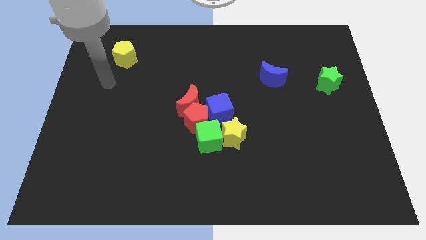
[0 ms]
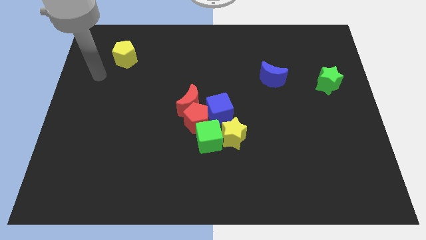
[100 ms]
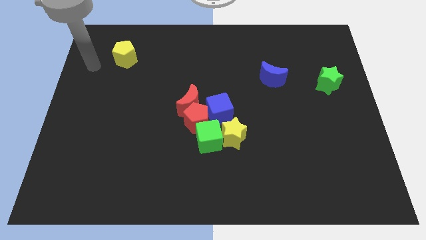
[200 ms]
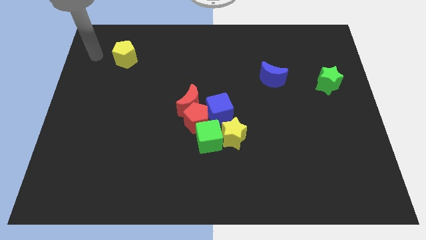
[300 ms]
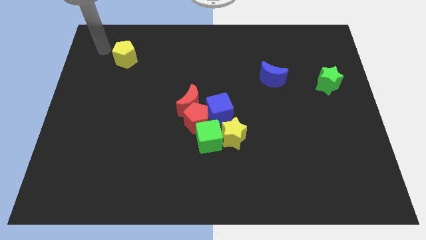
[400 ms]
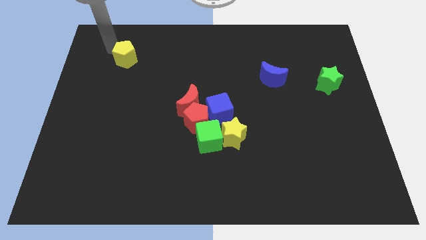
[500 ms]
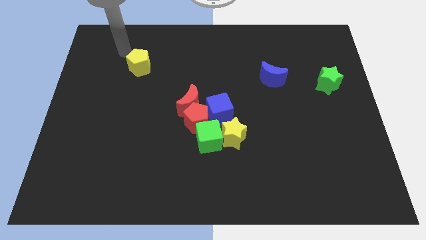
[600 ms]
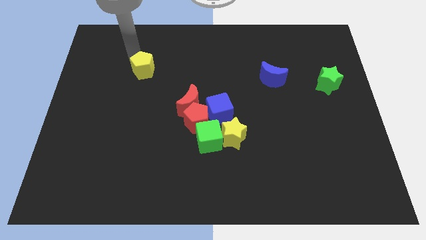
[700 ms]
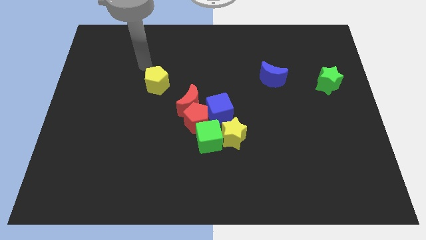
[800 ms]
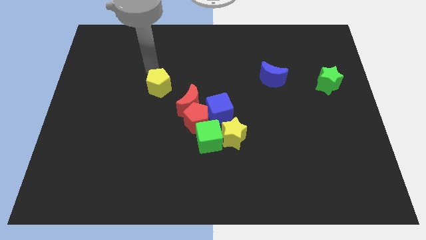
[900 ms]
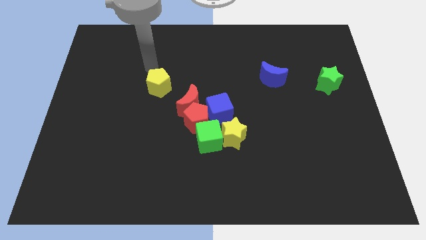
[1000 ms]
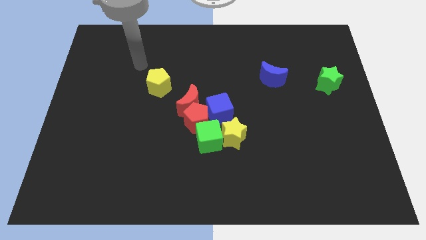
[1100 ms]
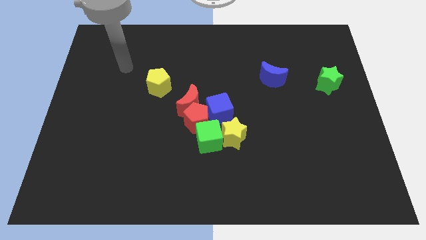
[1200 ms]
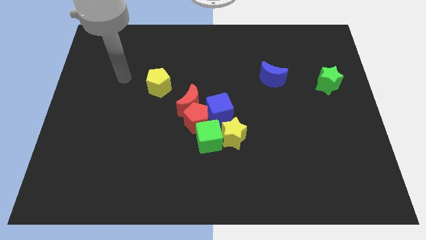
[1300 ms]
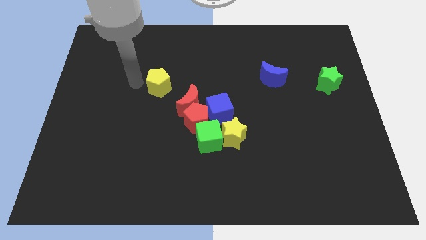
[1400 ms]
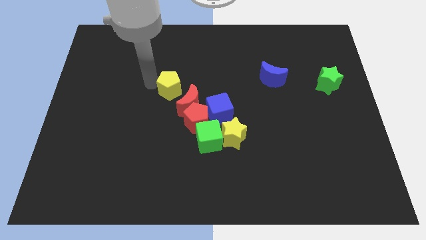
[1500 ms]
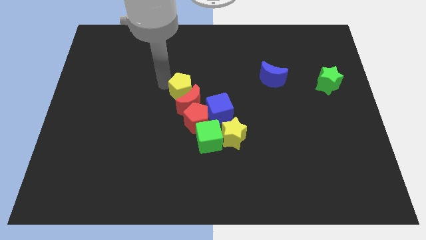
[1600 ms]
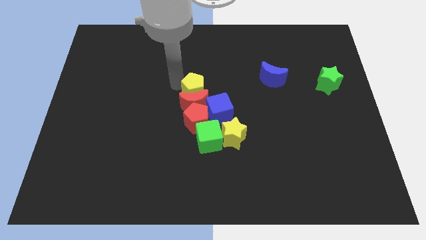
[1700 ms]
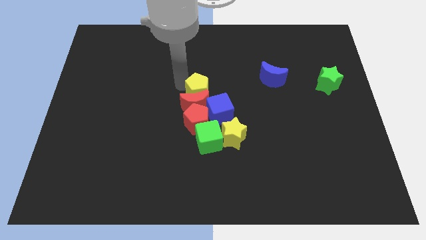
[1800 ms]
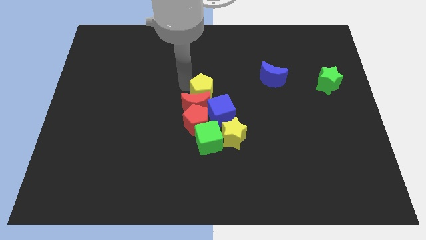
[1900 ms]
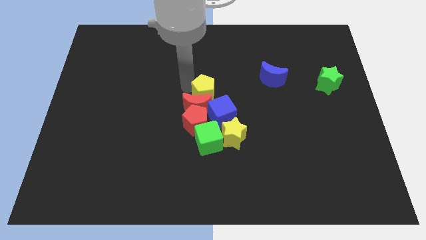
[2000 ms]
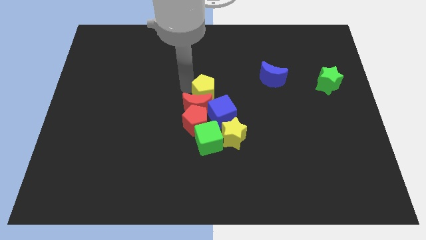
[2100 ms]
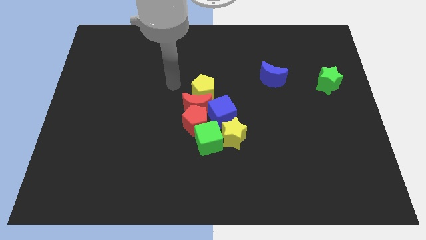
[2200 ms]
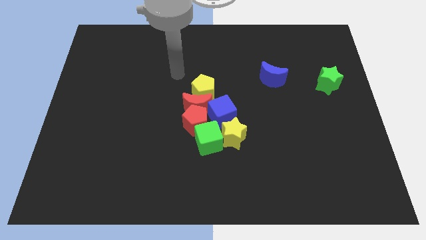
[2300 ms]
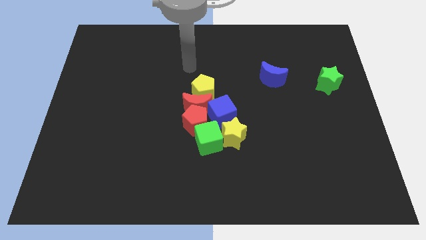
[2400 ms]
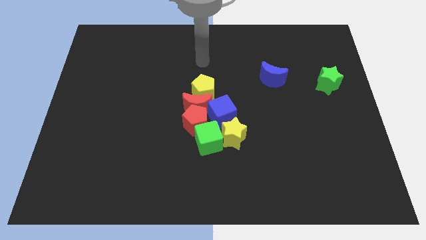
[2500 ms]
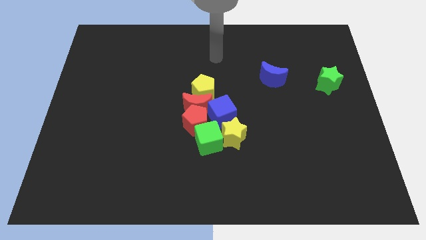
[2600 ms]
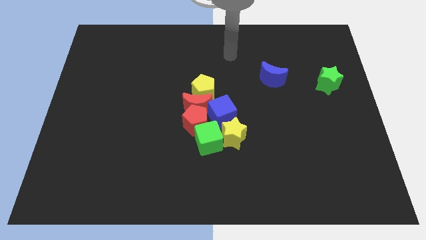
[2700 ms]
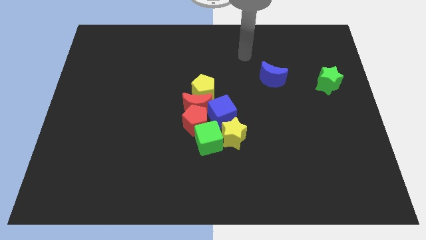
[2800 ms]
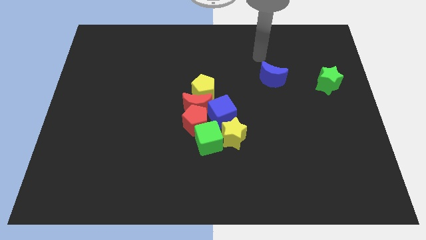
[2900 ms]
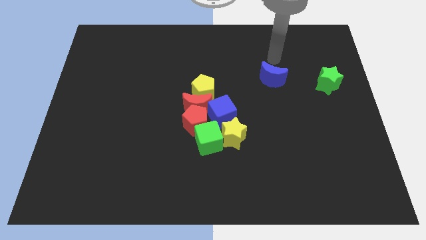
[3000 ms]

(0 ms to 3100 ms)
place the yellow pentagon above the red crescent

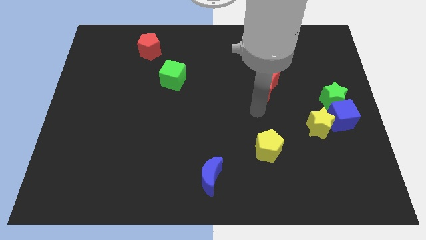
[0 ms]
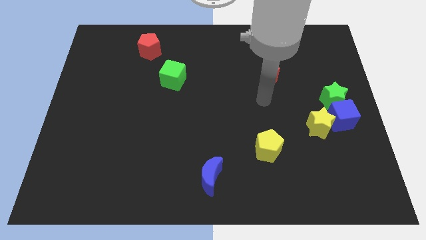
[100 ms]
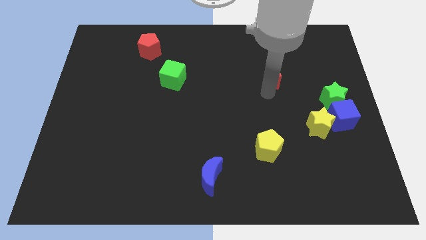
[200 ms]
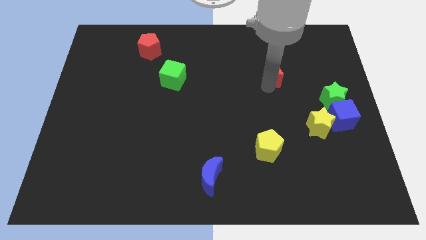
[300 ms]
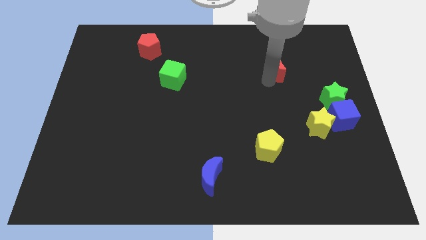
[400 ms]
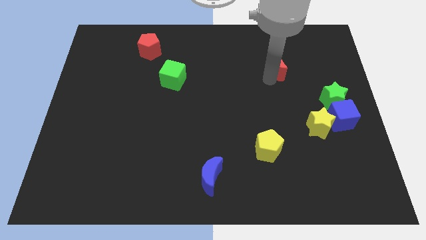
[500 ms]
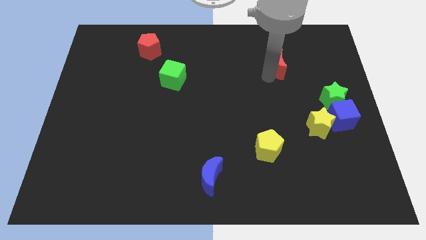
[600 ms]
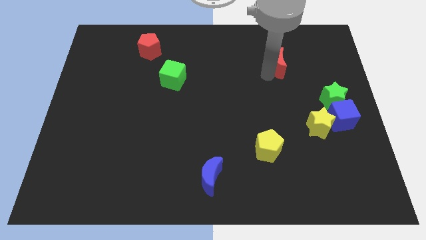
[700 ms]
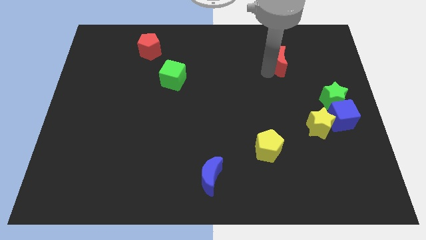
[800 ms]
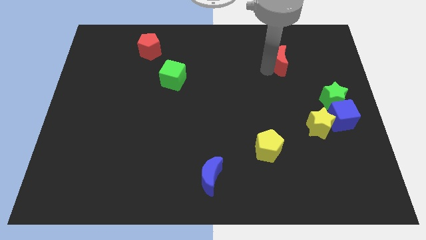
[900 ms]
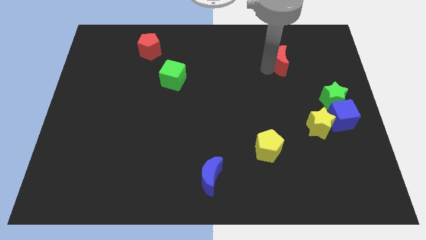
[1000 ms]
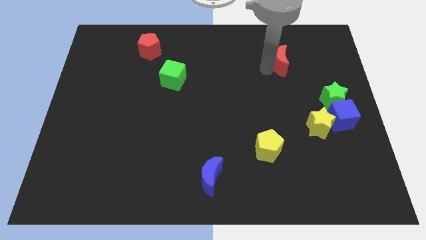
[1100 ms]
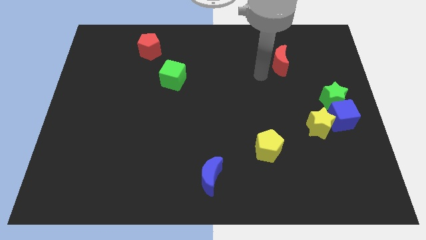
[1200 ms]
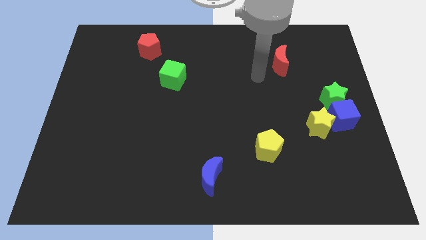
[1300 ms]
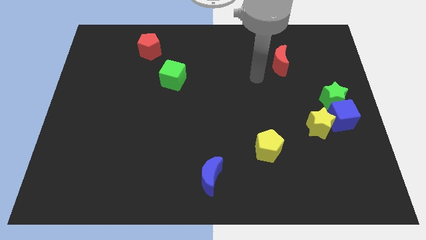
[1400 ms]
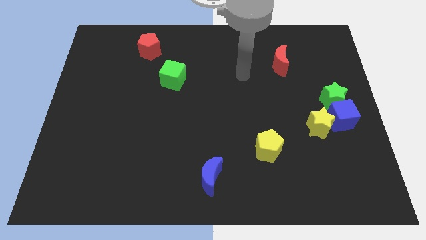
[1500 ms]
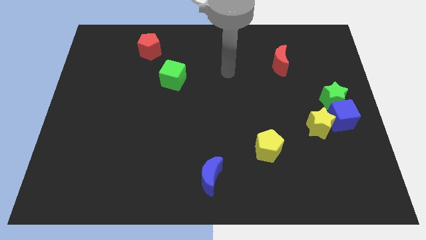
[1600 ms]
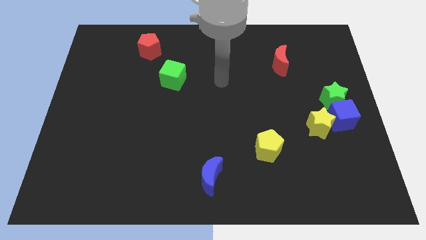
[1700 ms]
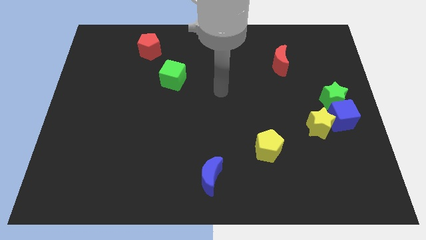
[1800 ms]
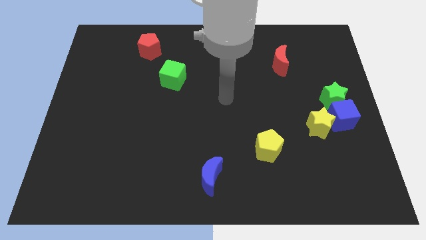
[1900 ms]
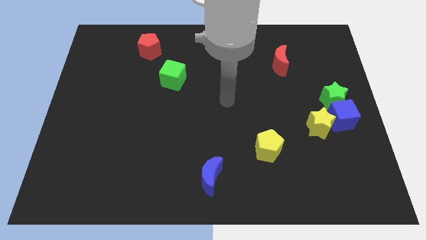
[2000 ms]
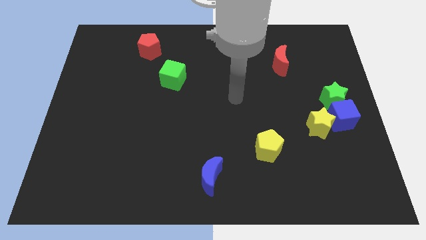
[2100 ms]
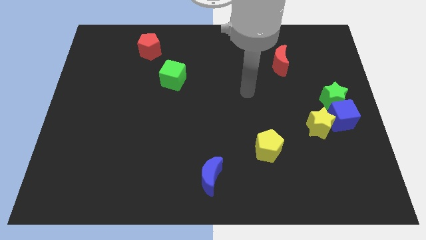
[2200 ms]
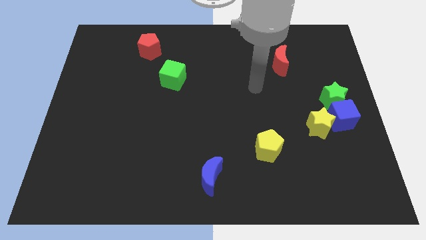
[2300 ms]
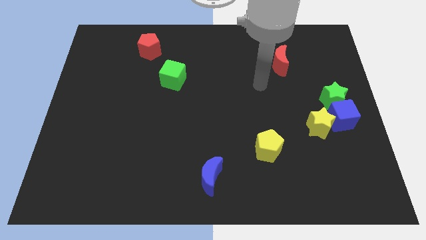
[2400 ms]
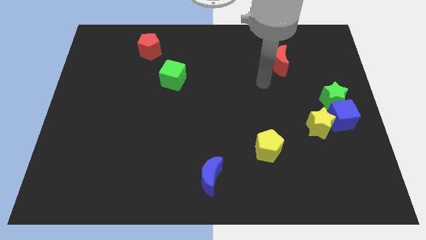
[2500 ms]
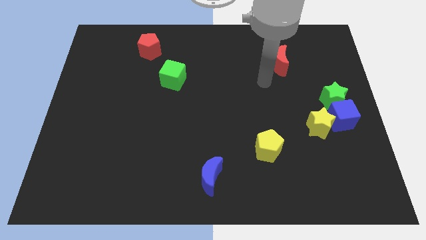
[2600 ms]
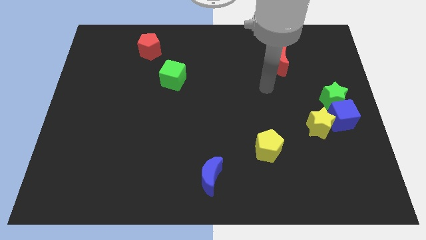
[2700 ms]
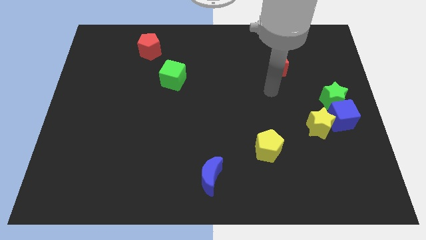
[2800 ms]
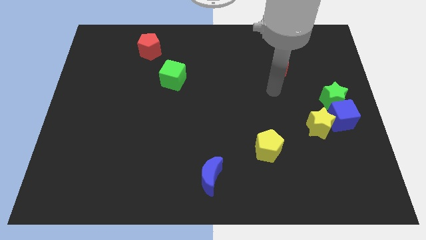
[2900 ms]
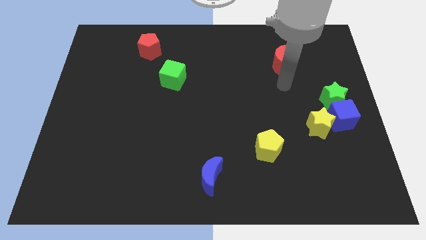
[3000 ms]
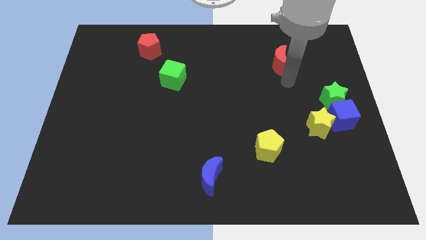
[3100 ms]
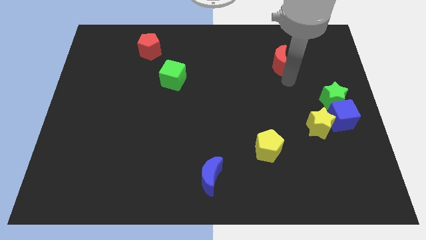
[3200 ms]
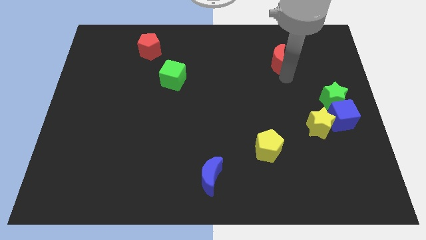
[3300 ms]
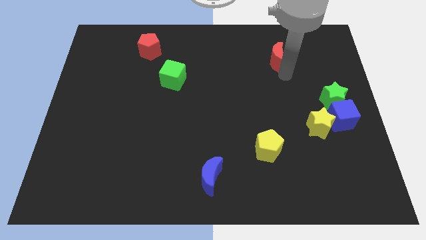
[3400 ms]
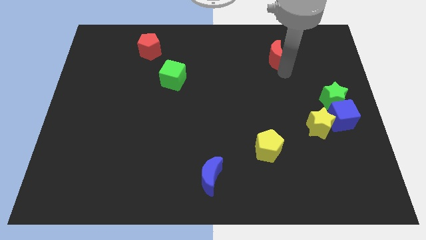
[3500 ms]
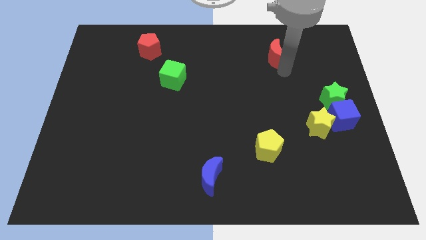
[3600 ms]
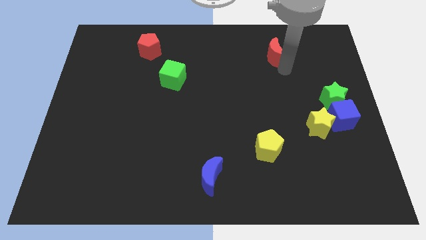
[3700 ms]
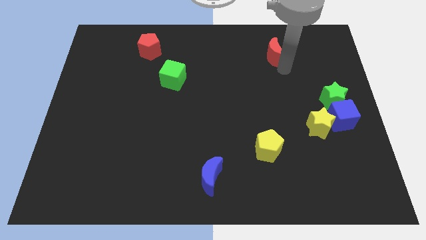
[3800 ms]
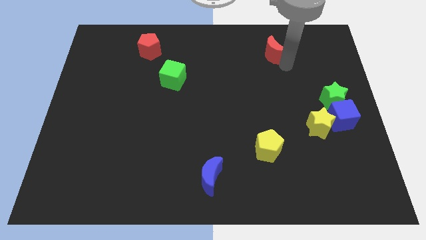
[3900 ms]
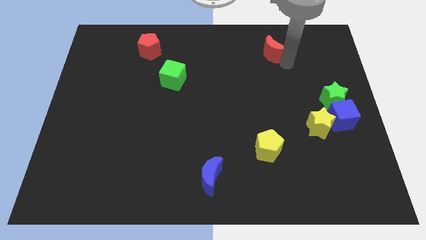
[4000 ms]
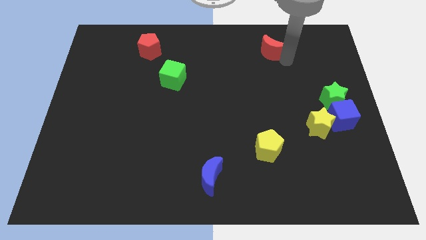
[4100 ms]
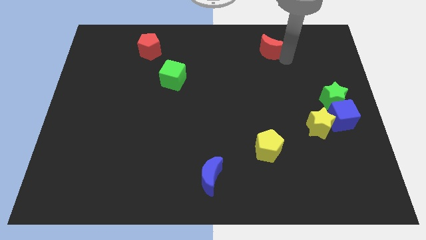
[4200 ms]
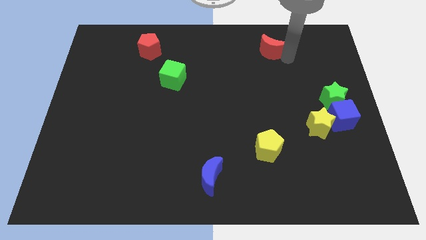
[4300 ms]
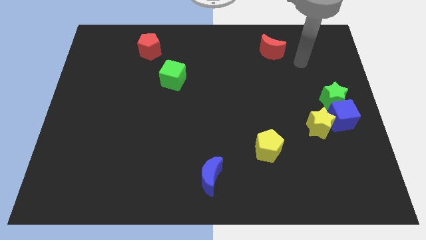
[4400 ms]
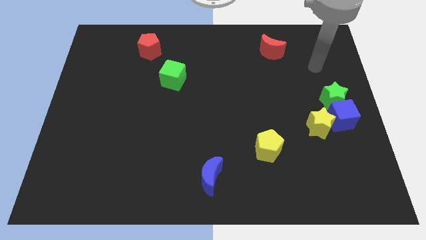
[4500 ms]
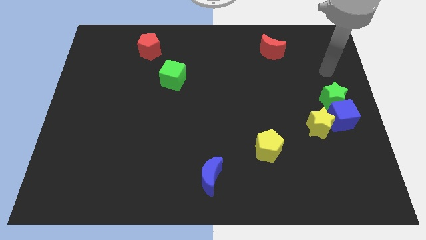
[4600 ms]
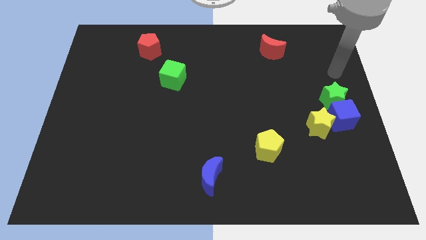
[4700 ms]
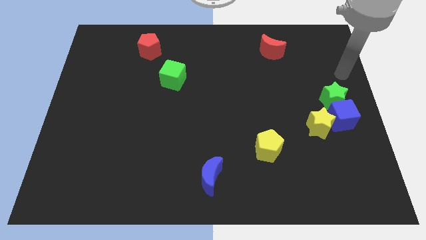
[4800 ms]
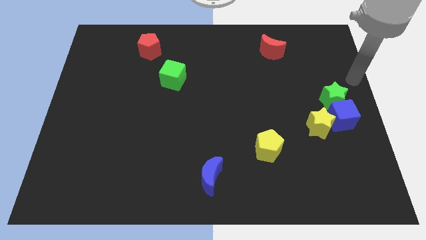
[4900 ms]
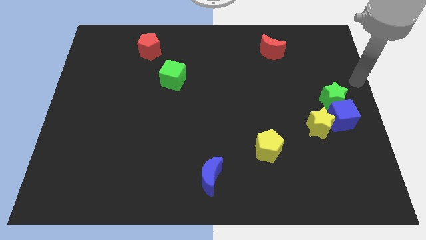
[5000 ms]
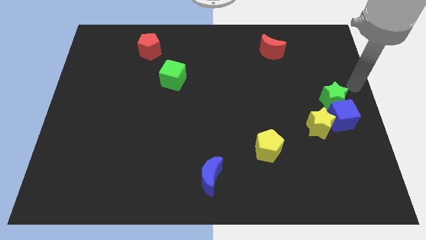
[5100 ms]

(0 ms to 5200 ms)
place red crescent to the top of the board

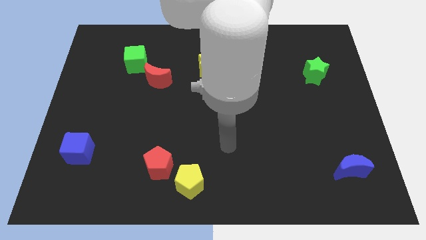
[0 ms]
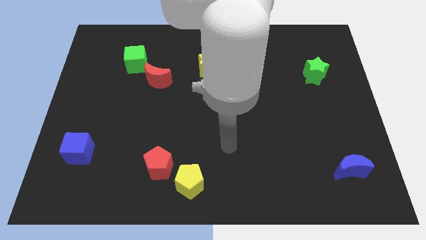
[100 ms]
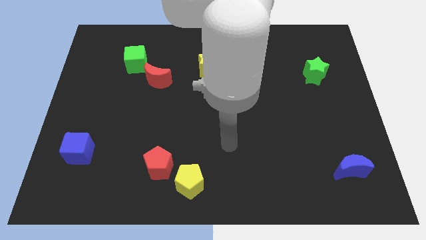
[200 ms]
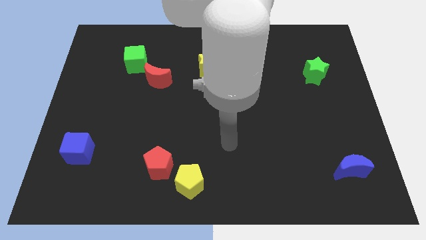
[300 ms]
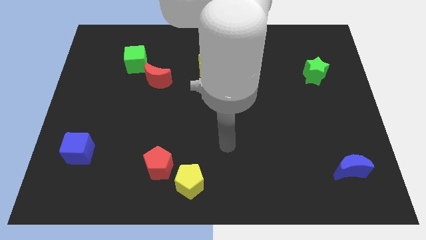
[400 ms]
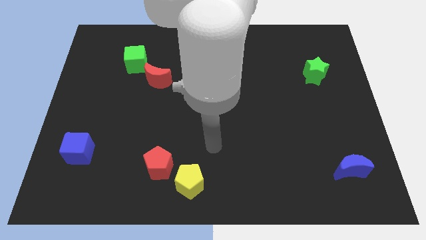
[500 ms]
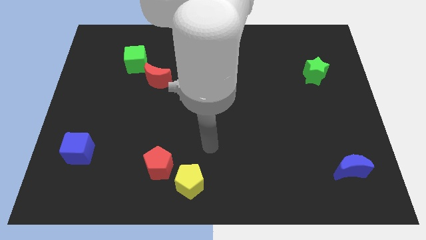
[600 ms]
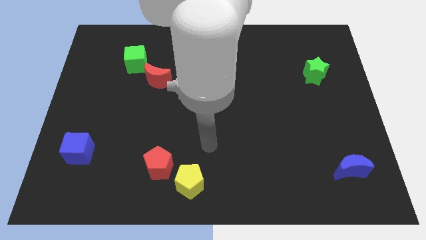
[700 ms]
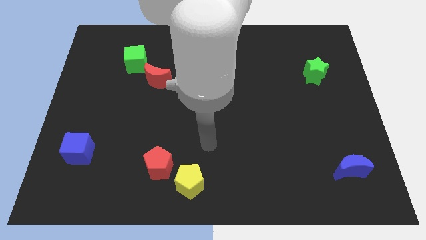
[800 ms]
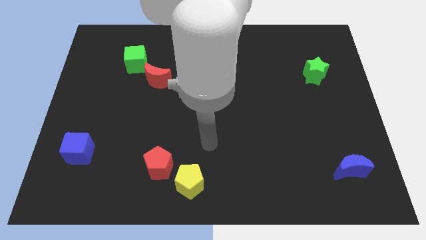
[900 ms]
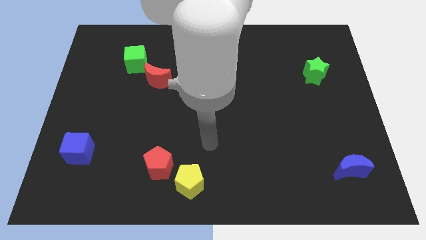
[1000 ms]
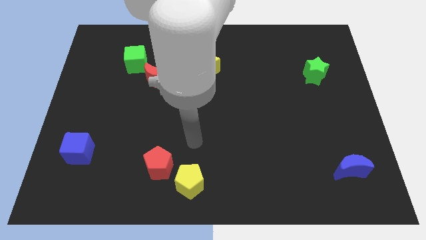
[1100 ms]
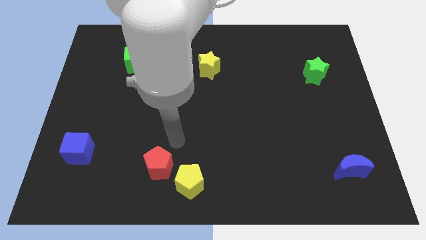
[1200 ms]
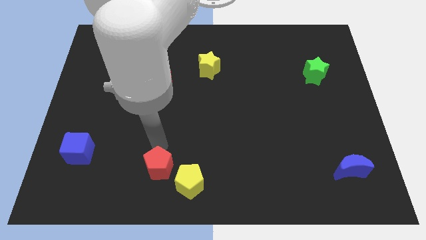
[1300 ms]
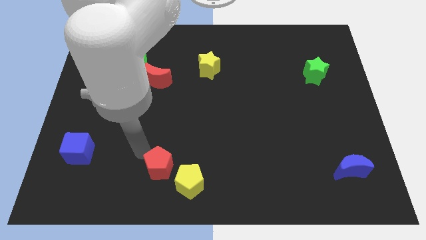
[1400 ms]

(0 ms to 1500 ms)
point your arm at the top of red pentagon
